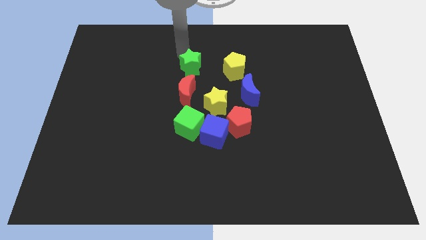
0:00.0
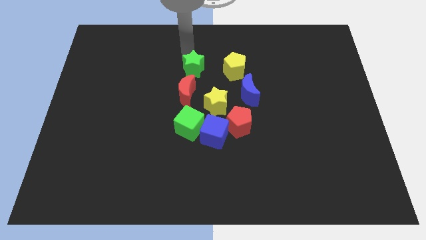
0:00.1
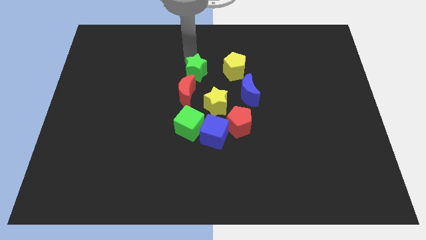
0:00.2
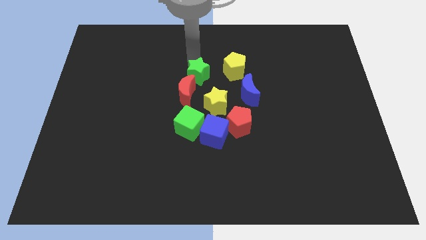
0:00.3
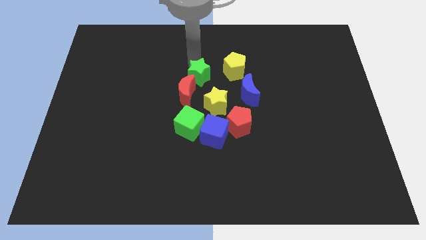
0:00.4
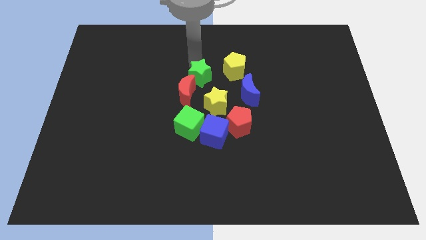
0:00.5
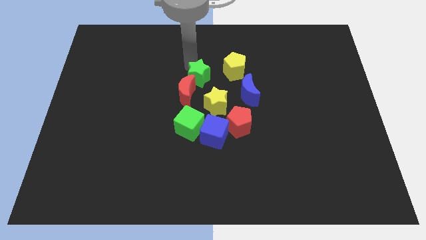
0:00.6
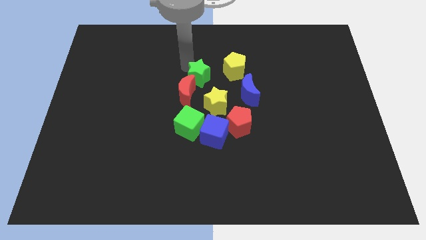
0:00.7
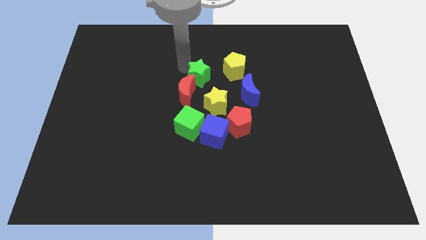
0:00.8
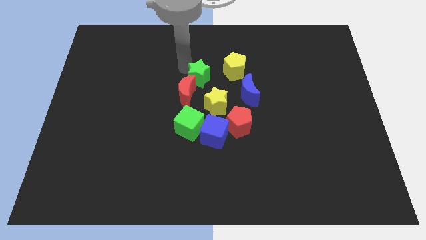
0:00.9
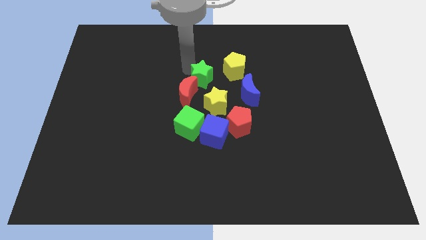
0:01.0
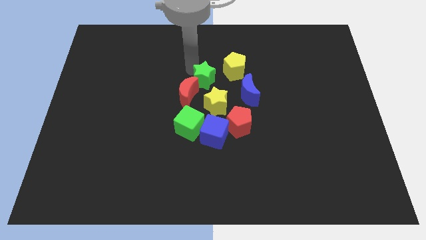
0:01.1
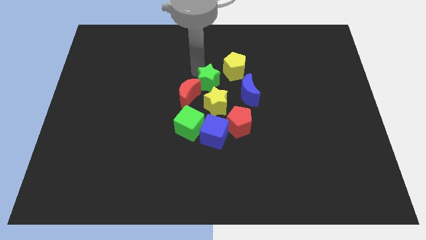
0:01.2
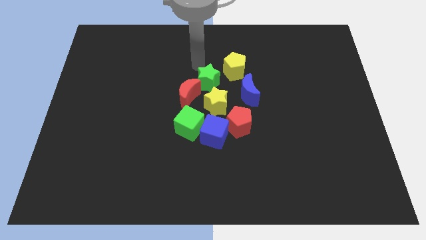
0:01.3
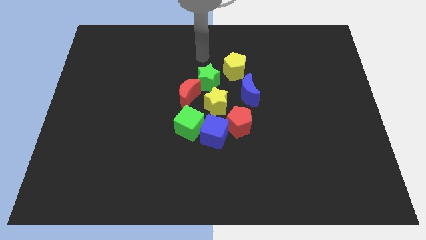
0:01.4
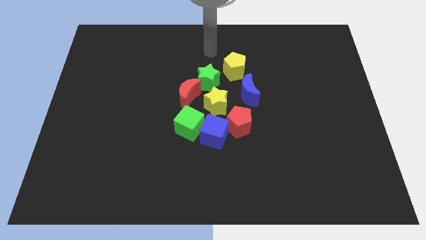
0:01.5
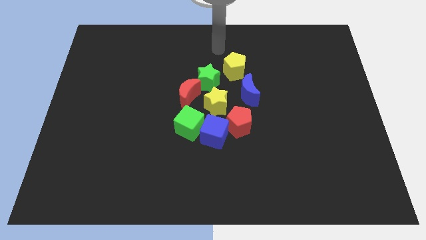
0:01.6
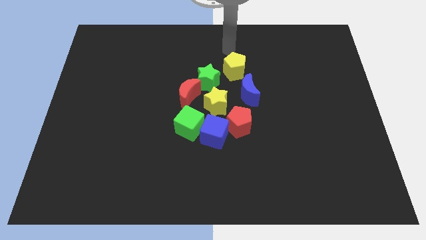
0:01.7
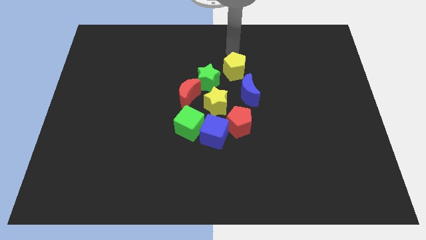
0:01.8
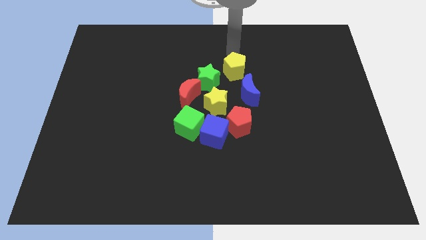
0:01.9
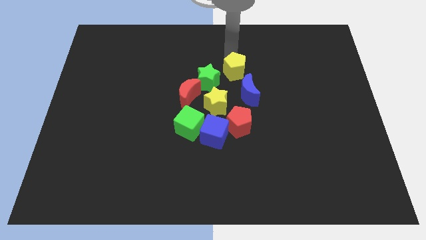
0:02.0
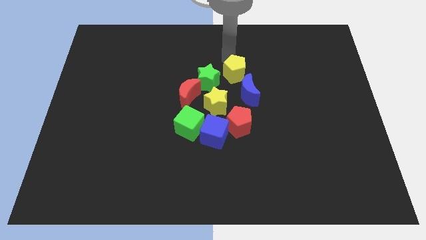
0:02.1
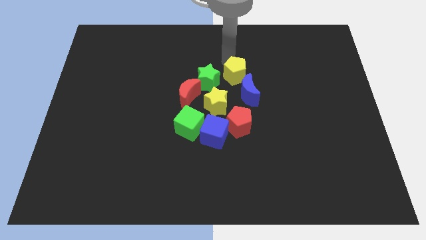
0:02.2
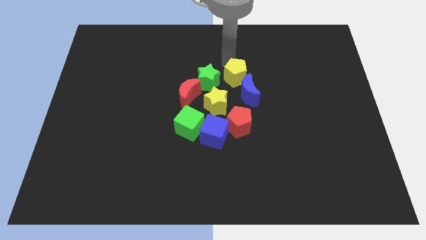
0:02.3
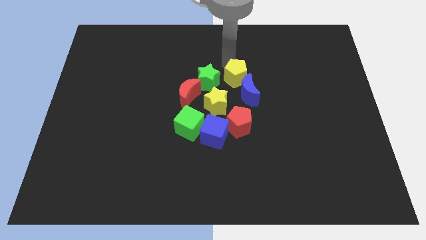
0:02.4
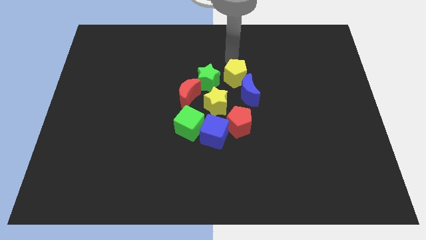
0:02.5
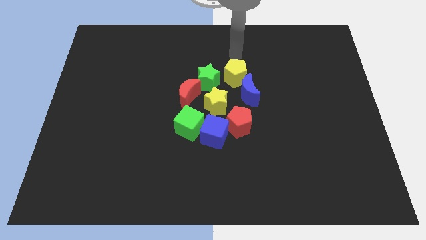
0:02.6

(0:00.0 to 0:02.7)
push the green star and yellow pentagon into the group of blocks

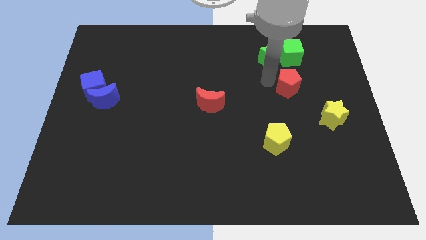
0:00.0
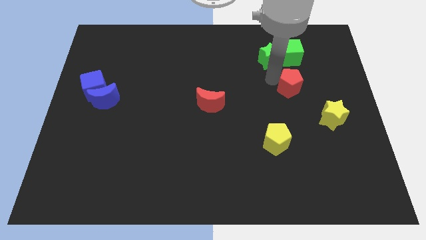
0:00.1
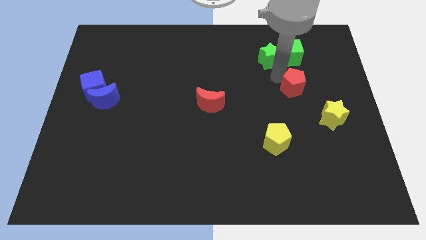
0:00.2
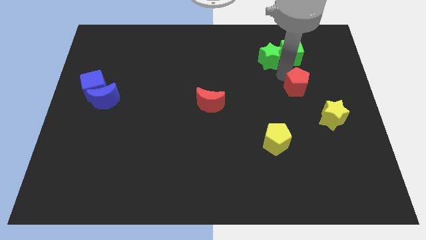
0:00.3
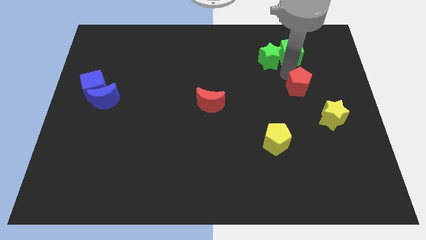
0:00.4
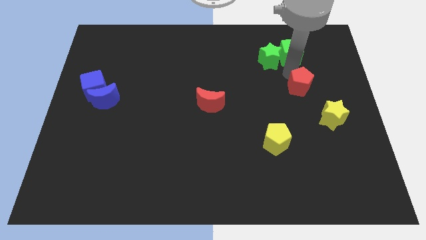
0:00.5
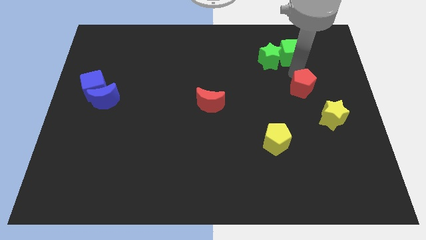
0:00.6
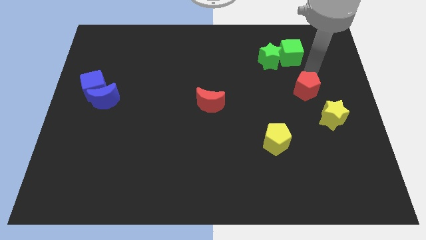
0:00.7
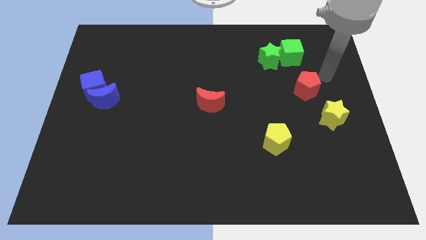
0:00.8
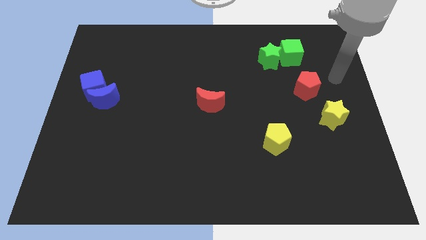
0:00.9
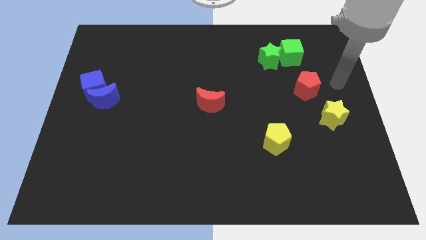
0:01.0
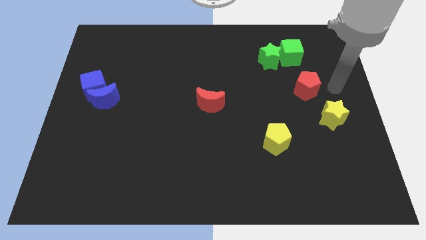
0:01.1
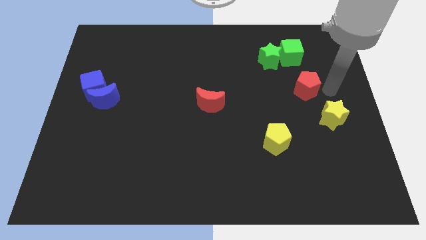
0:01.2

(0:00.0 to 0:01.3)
slide the red pentagon slightly to the right

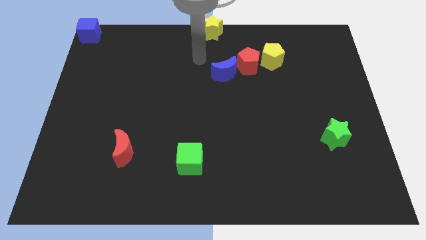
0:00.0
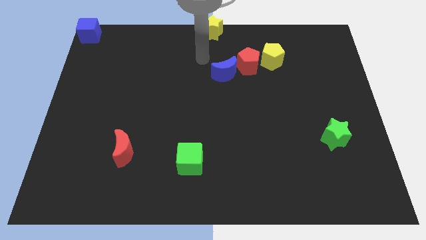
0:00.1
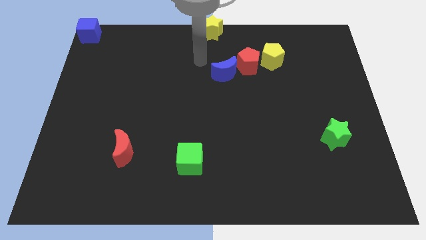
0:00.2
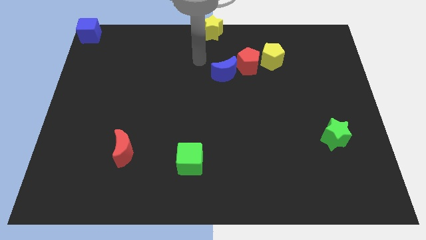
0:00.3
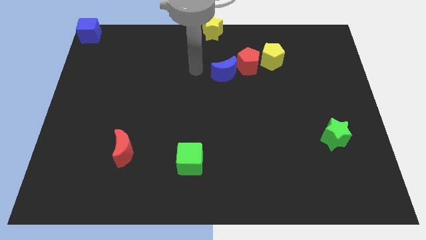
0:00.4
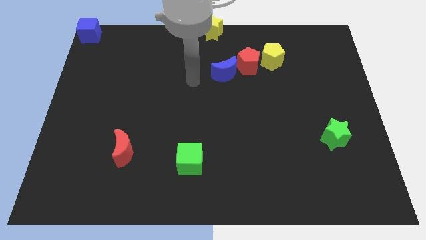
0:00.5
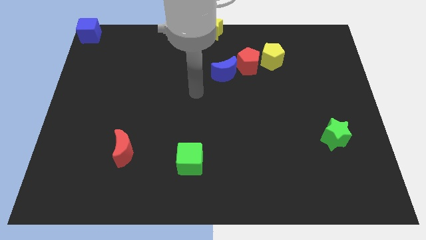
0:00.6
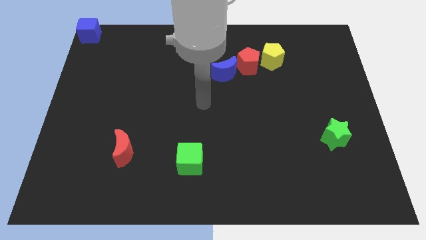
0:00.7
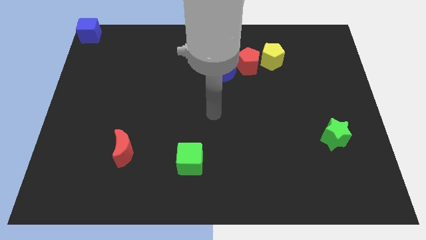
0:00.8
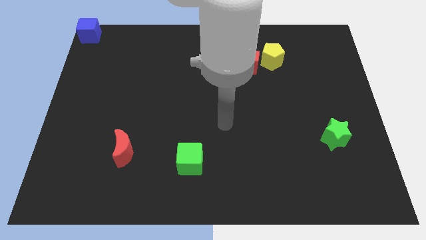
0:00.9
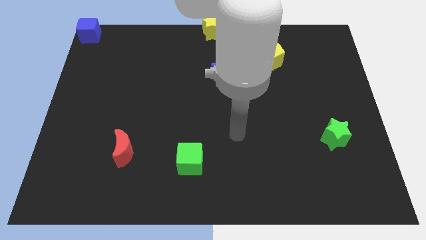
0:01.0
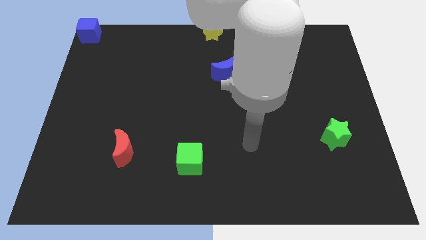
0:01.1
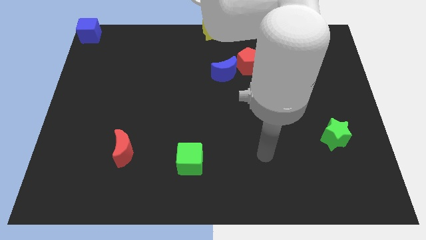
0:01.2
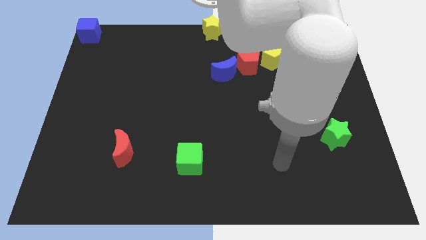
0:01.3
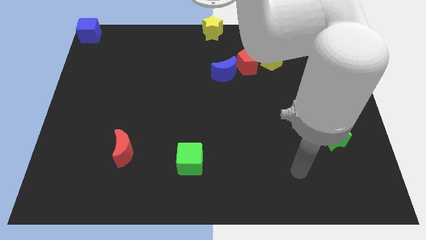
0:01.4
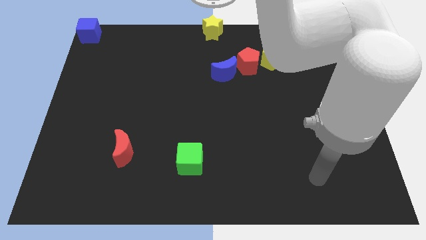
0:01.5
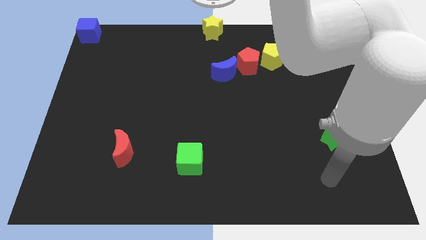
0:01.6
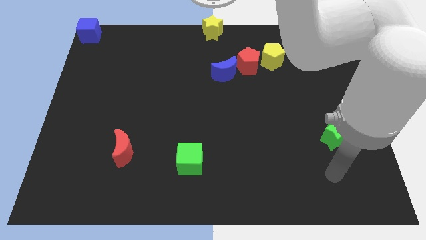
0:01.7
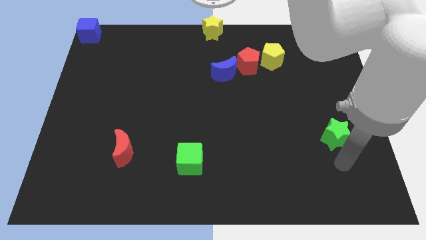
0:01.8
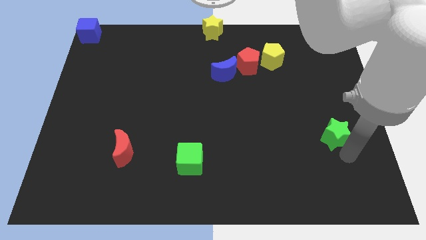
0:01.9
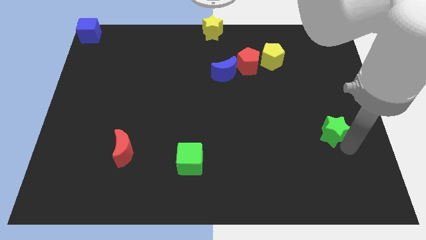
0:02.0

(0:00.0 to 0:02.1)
point the arm below the green star

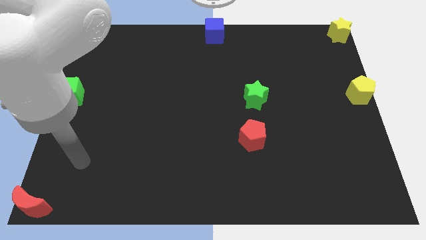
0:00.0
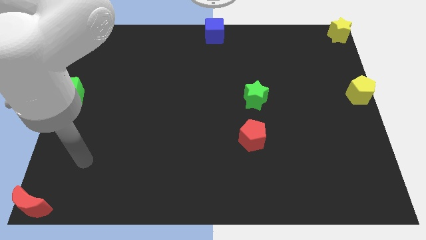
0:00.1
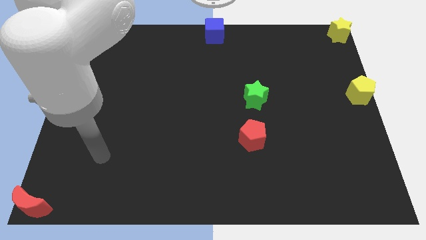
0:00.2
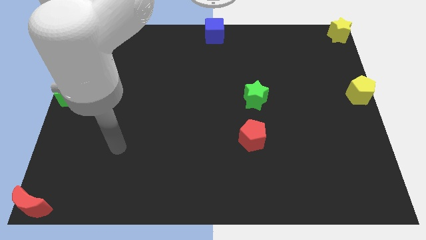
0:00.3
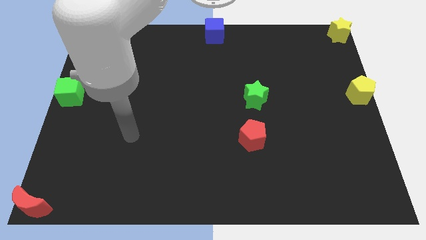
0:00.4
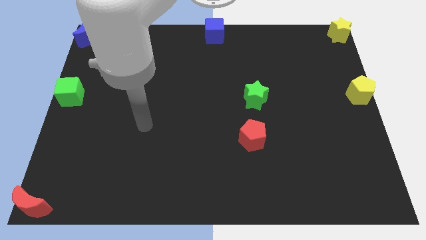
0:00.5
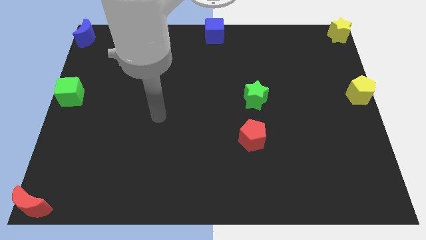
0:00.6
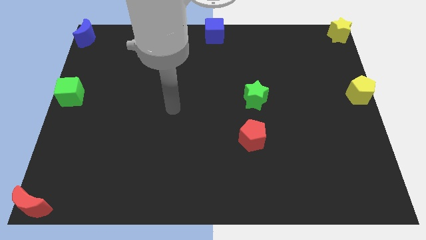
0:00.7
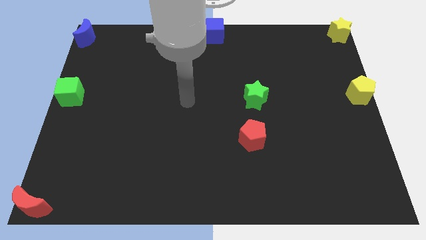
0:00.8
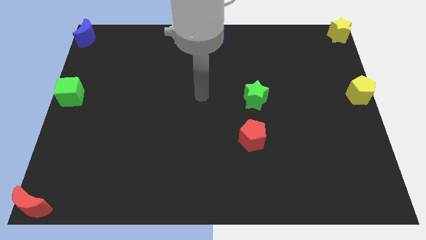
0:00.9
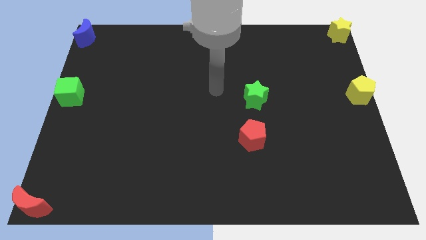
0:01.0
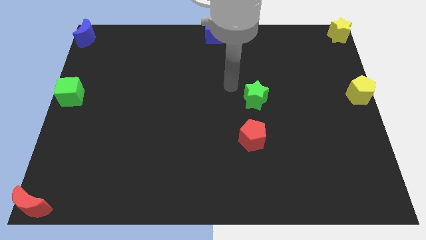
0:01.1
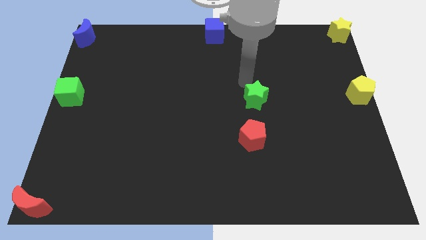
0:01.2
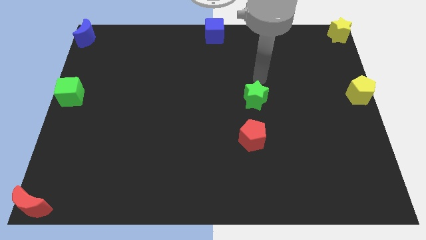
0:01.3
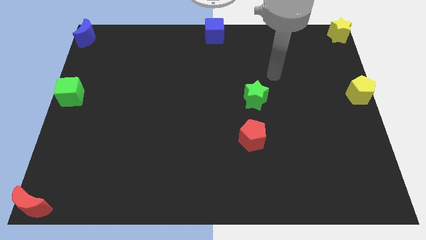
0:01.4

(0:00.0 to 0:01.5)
move your arm away from red moon

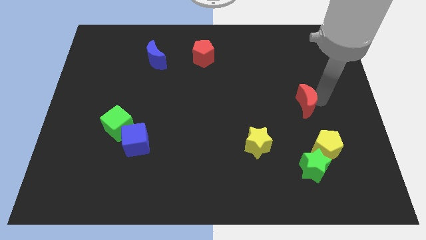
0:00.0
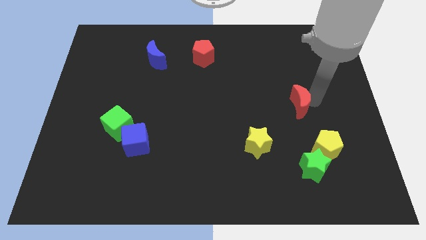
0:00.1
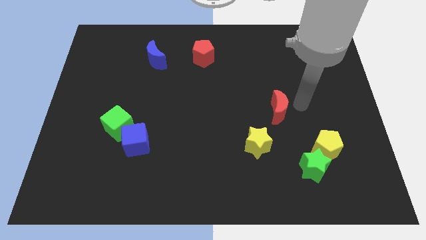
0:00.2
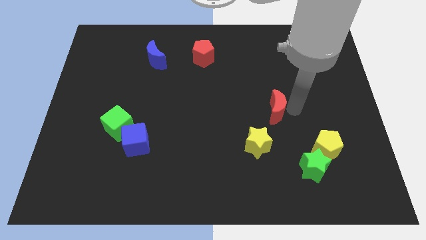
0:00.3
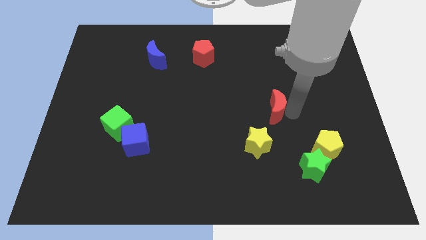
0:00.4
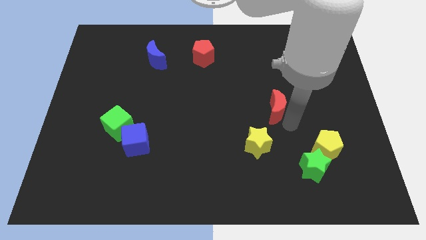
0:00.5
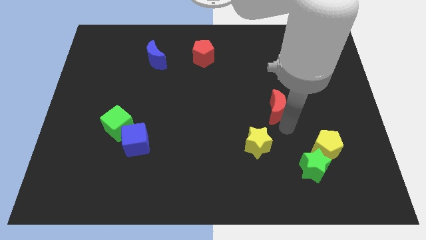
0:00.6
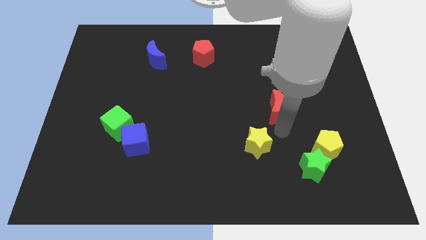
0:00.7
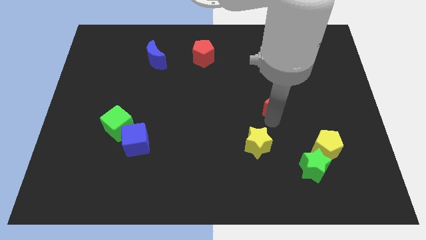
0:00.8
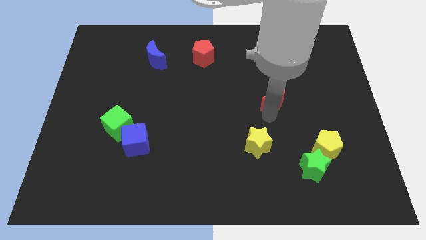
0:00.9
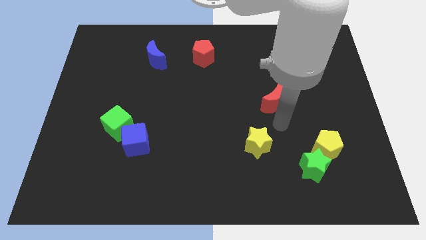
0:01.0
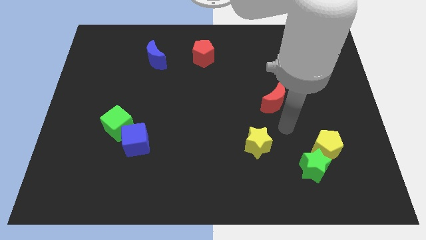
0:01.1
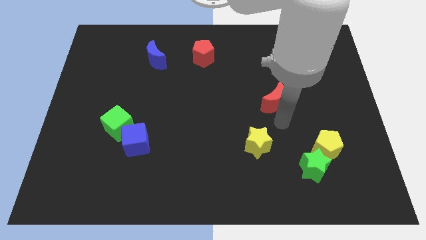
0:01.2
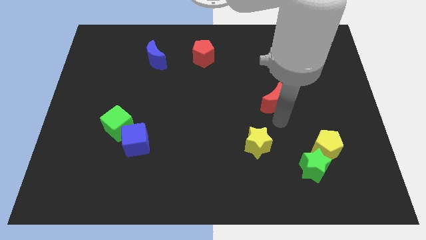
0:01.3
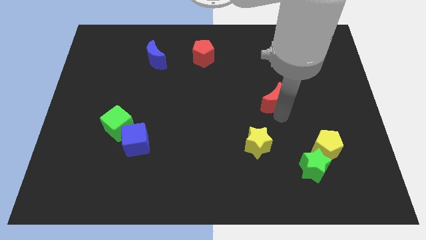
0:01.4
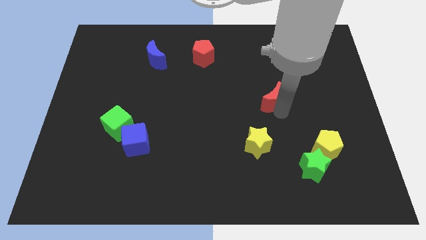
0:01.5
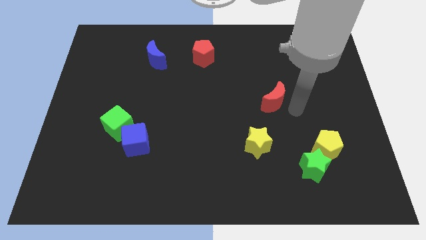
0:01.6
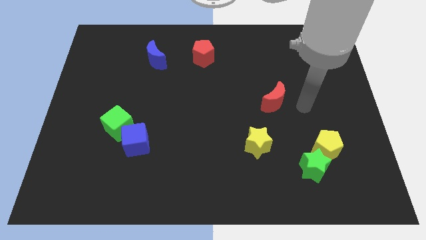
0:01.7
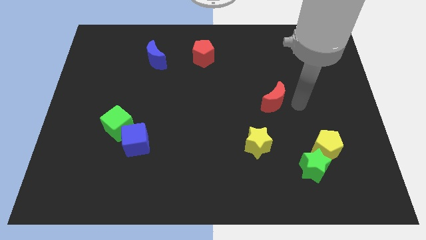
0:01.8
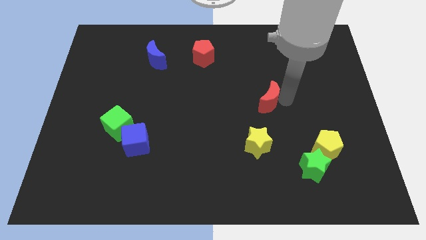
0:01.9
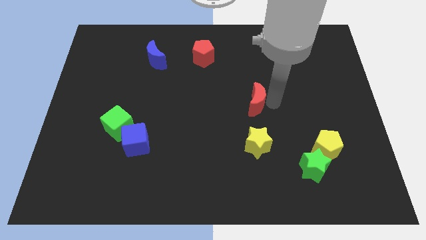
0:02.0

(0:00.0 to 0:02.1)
place red crescent above the yellow star
